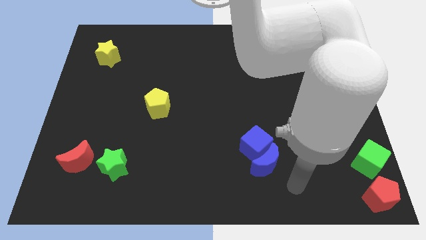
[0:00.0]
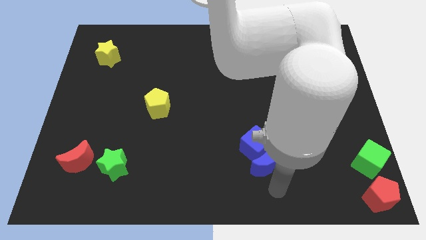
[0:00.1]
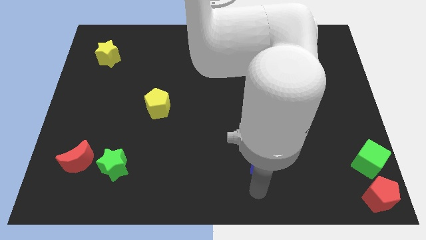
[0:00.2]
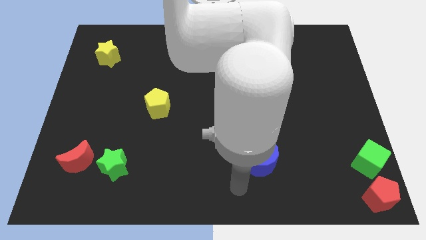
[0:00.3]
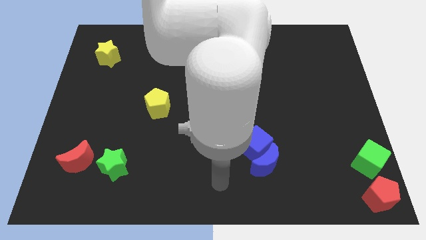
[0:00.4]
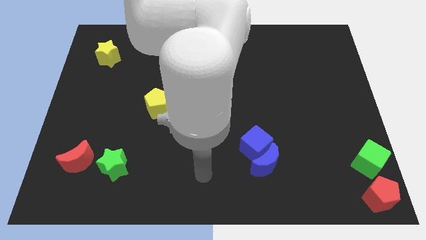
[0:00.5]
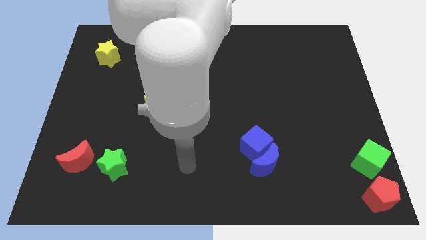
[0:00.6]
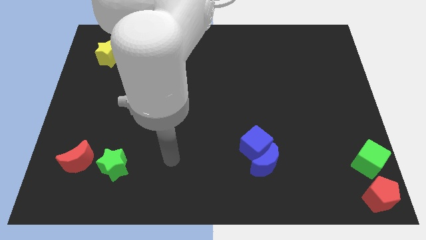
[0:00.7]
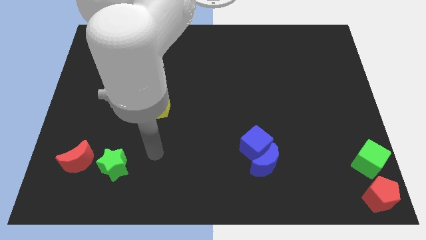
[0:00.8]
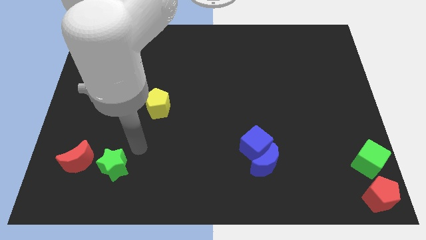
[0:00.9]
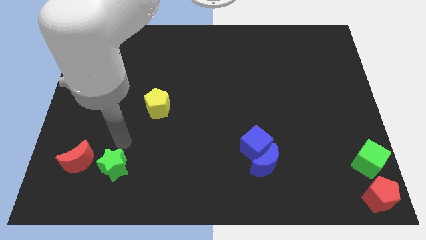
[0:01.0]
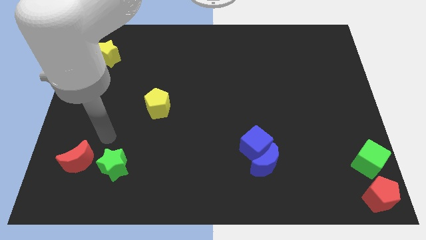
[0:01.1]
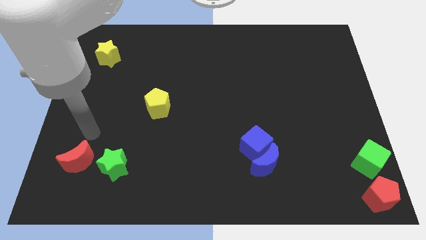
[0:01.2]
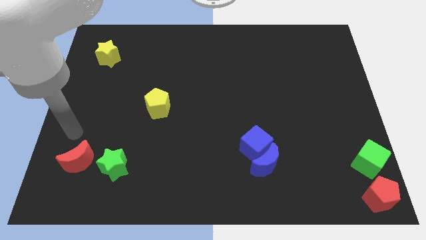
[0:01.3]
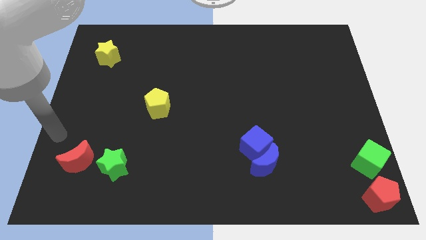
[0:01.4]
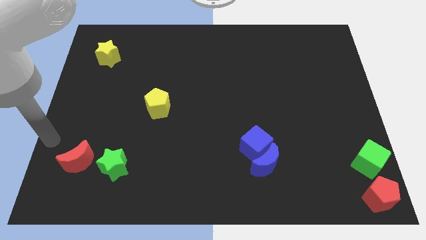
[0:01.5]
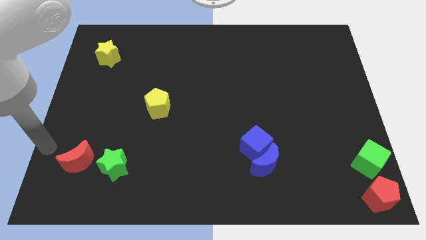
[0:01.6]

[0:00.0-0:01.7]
move around your arm on the board

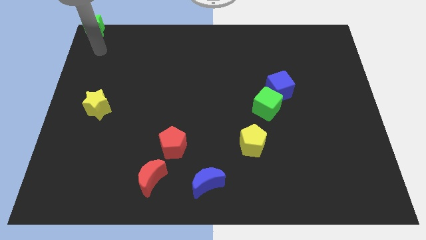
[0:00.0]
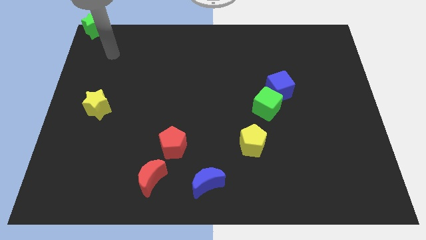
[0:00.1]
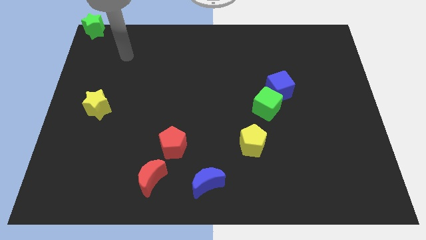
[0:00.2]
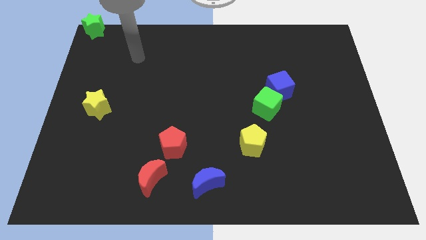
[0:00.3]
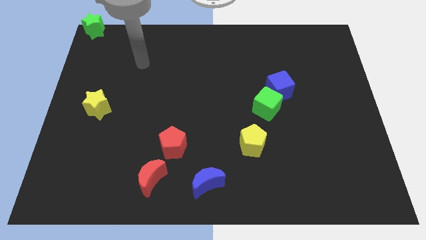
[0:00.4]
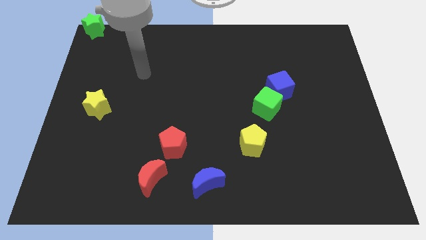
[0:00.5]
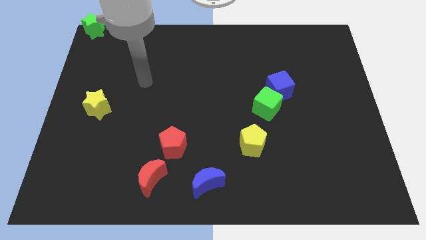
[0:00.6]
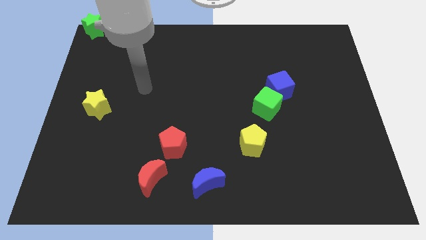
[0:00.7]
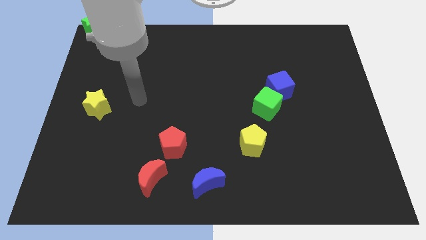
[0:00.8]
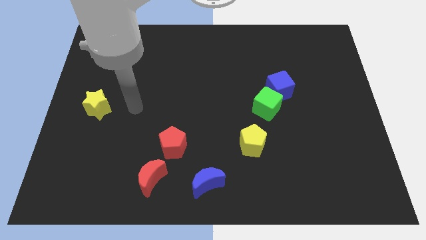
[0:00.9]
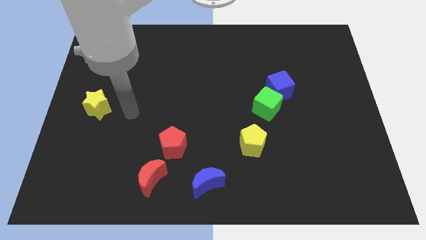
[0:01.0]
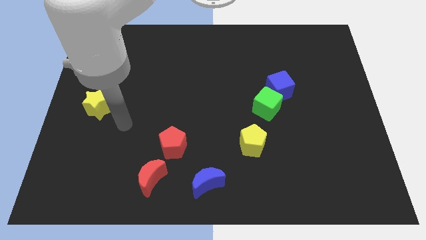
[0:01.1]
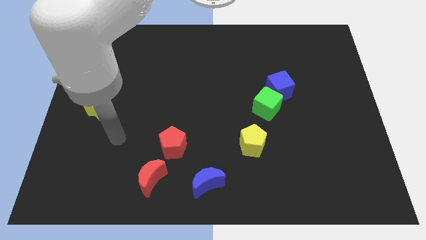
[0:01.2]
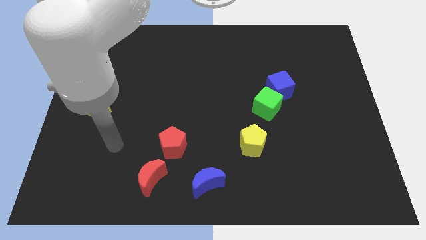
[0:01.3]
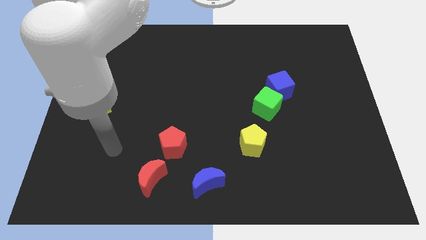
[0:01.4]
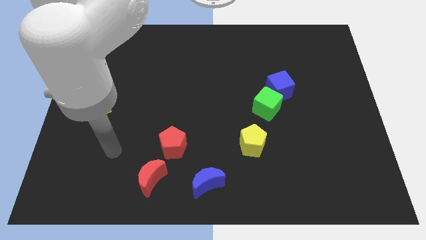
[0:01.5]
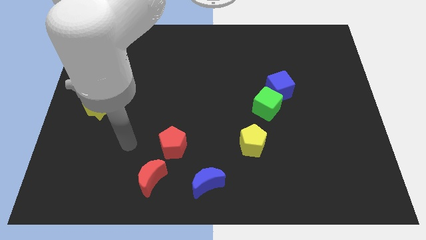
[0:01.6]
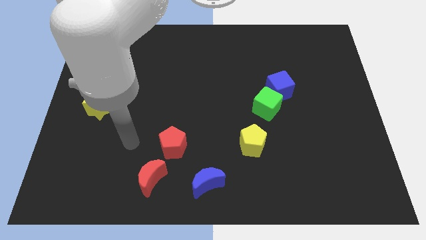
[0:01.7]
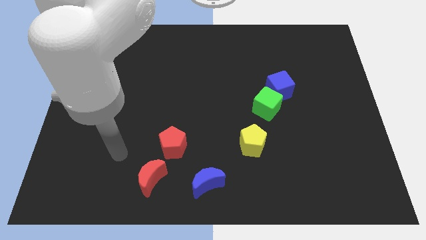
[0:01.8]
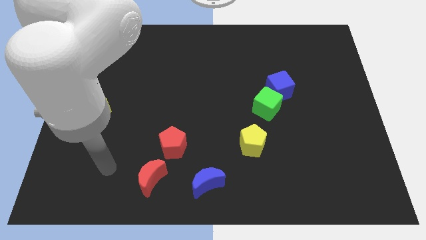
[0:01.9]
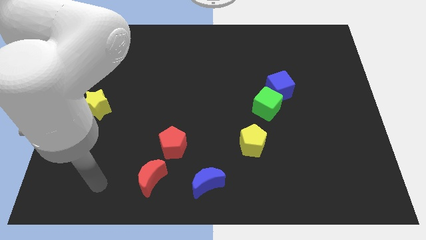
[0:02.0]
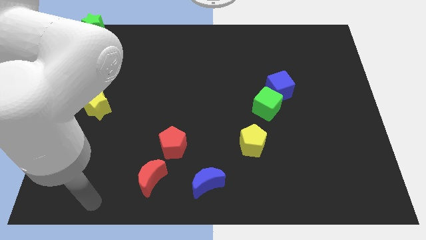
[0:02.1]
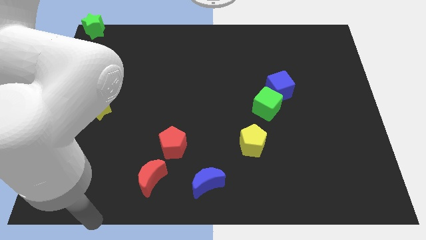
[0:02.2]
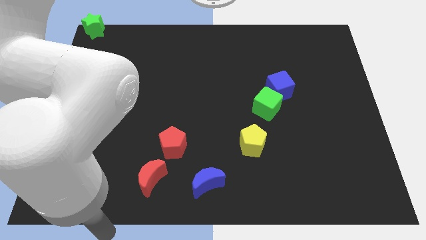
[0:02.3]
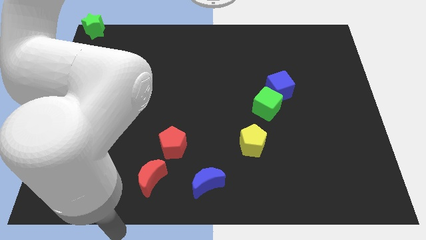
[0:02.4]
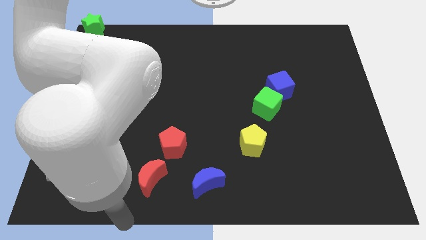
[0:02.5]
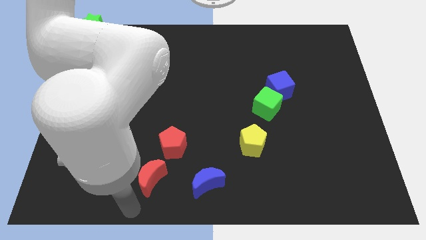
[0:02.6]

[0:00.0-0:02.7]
move your arm towards the red moon

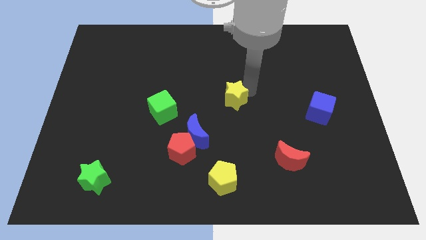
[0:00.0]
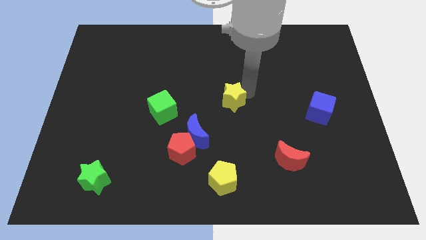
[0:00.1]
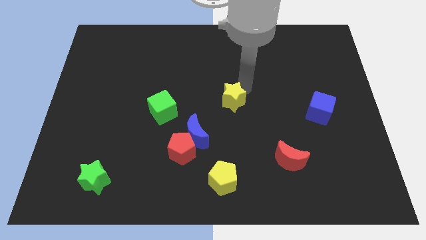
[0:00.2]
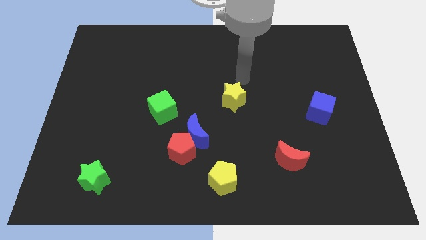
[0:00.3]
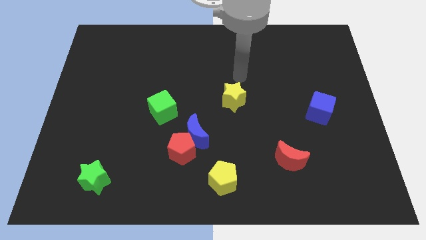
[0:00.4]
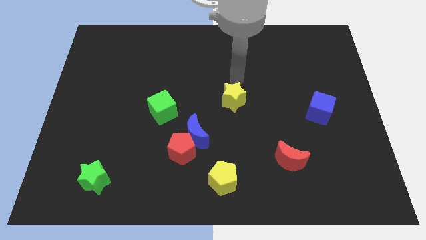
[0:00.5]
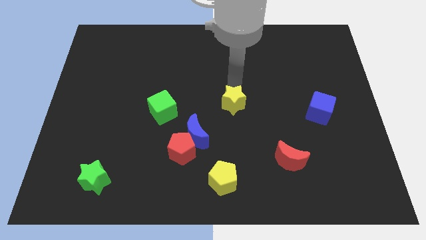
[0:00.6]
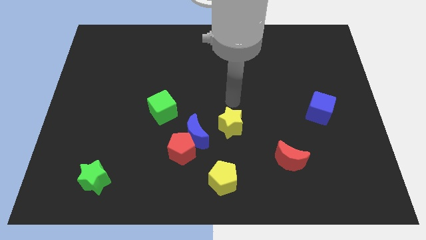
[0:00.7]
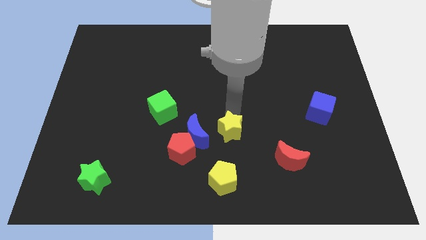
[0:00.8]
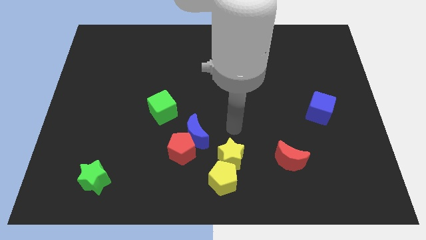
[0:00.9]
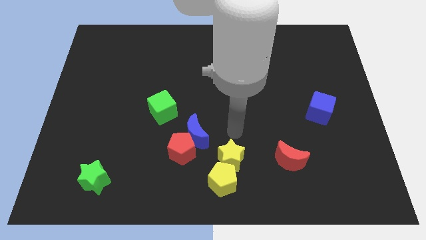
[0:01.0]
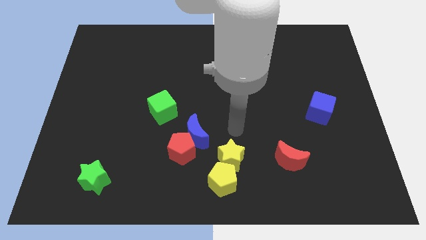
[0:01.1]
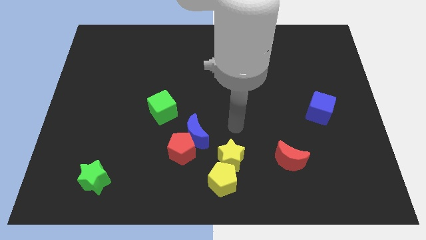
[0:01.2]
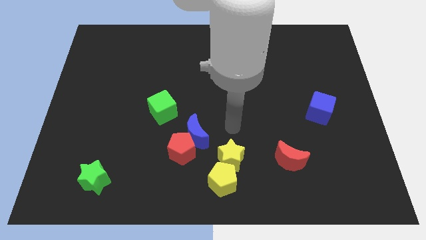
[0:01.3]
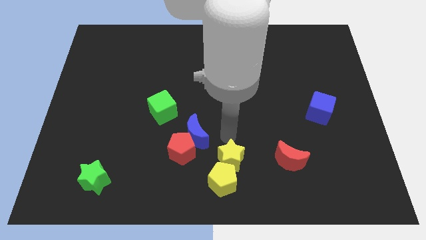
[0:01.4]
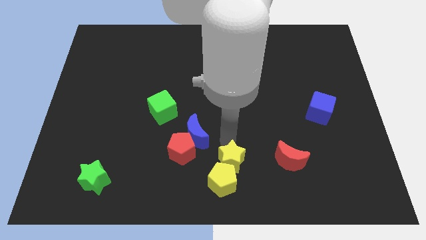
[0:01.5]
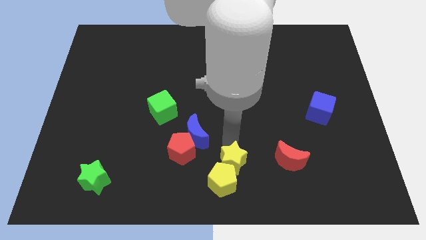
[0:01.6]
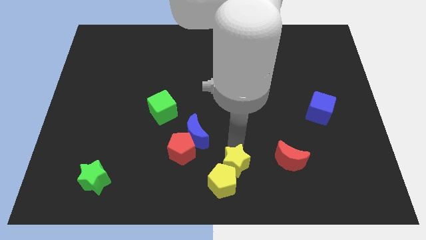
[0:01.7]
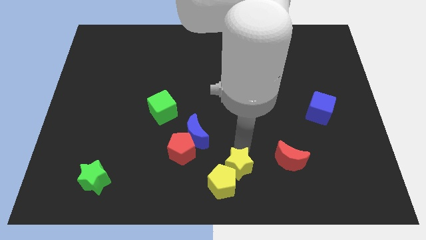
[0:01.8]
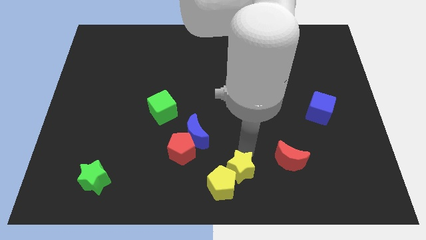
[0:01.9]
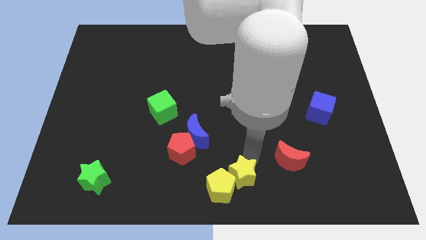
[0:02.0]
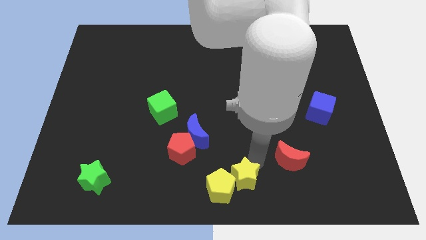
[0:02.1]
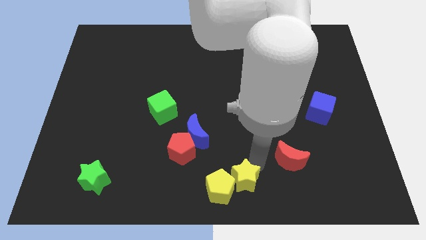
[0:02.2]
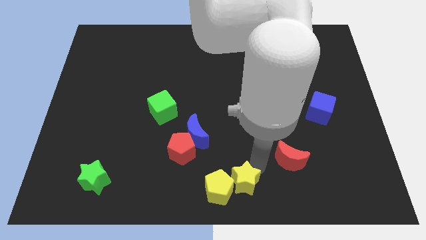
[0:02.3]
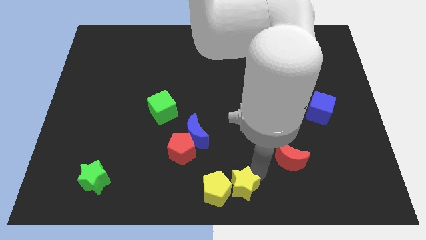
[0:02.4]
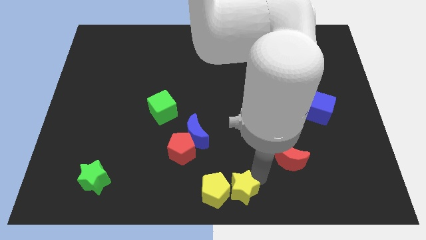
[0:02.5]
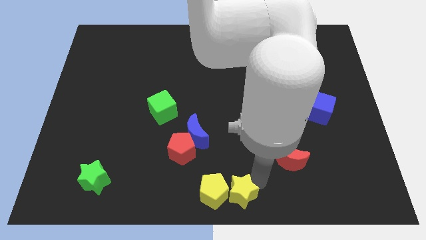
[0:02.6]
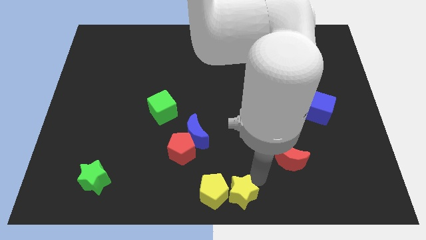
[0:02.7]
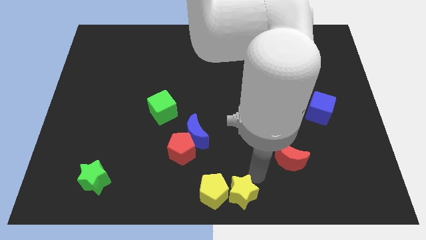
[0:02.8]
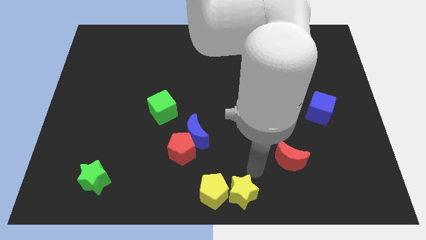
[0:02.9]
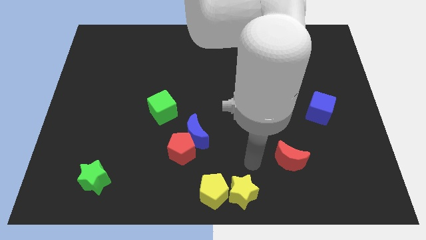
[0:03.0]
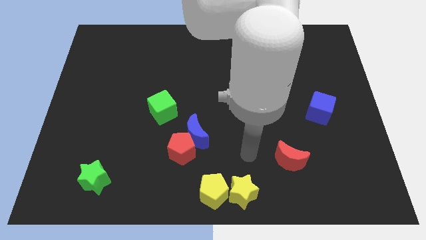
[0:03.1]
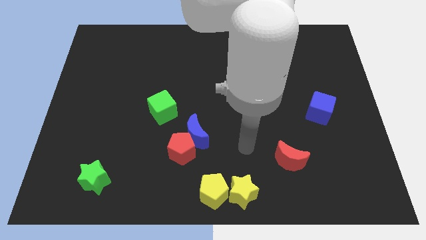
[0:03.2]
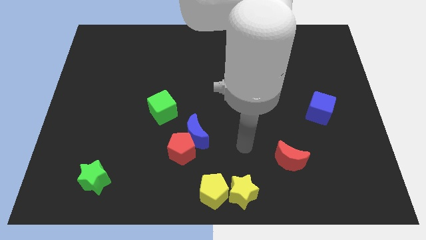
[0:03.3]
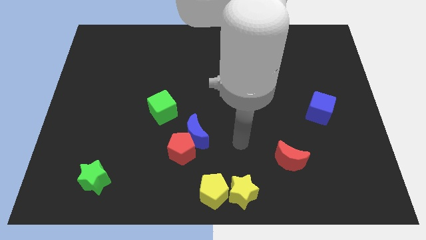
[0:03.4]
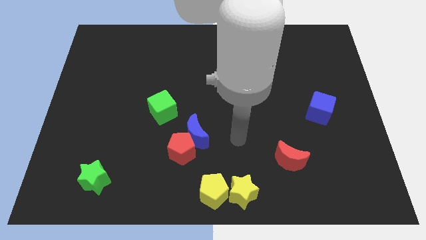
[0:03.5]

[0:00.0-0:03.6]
move the yellow star to the right of the yellow pentagon

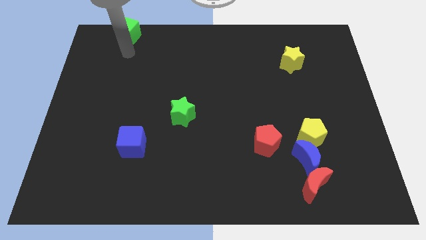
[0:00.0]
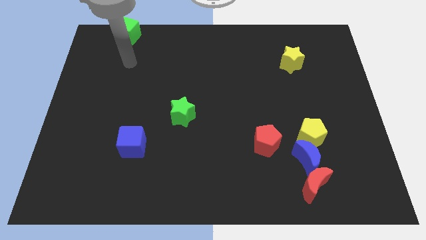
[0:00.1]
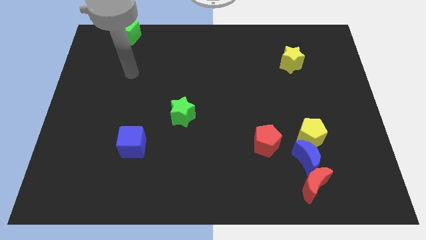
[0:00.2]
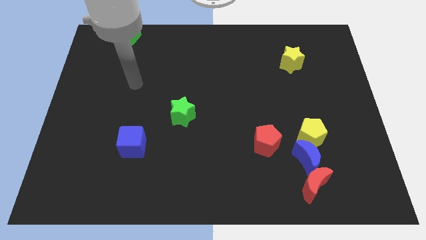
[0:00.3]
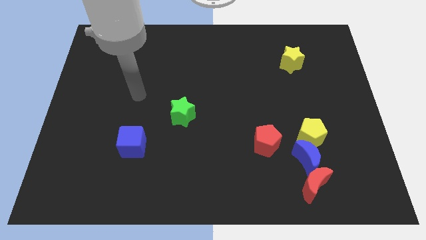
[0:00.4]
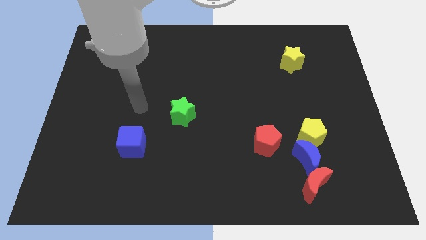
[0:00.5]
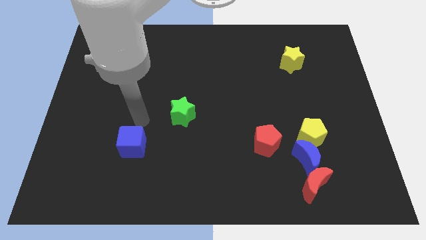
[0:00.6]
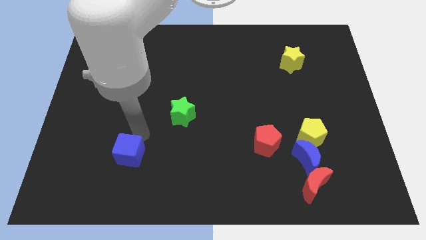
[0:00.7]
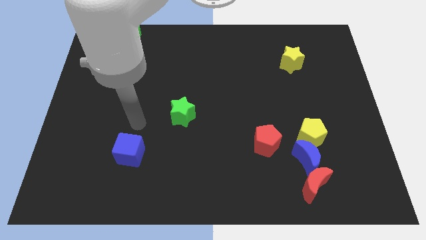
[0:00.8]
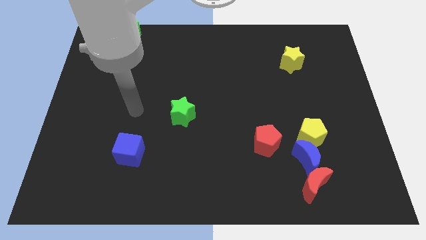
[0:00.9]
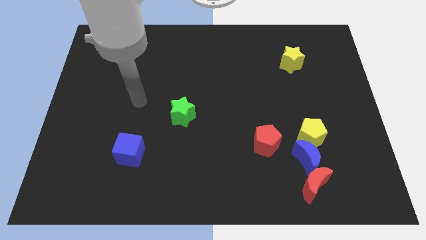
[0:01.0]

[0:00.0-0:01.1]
push the blue cube slightly to the bottom

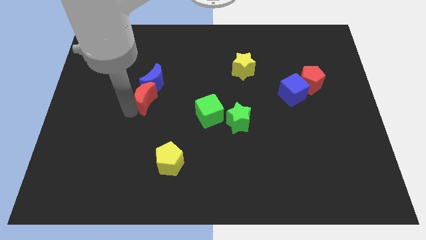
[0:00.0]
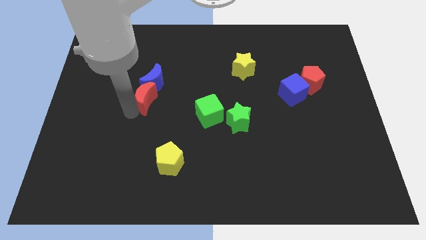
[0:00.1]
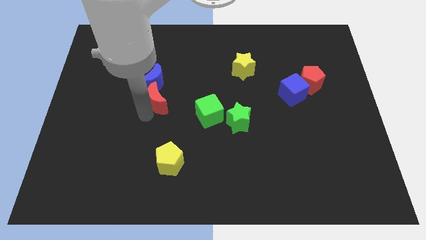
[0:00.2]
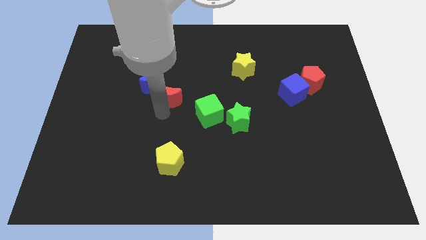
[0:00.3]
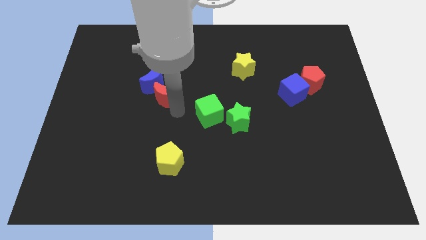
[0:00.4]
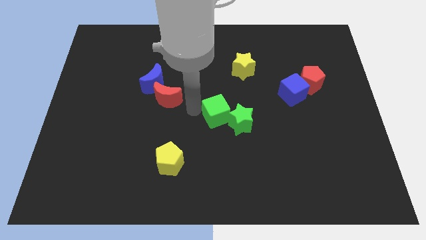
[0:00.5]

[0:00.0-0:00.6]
place red crescent vertical to the yellow pentagon
